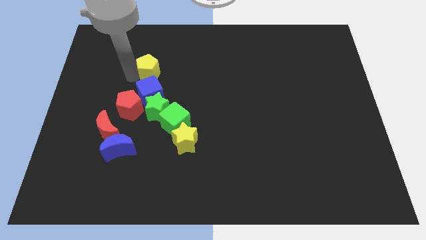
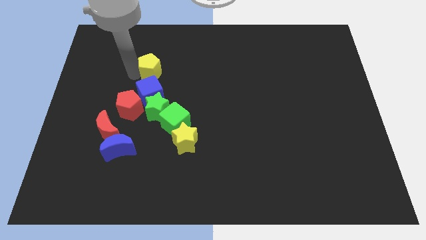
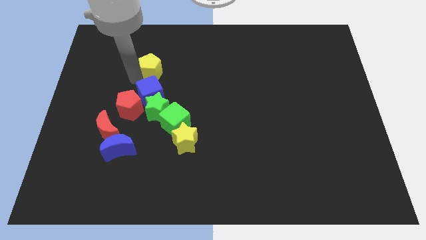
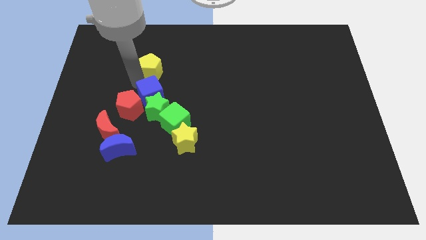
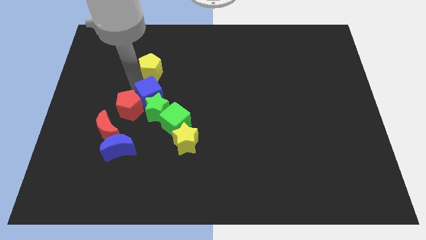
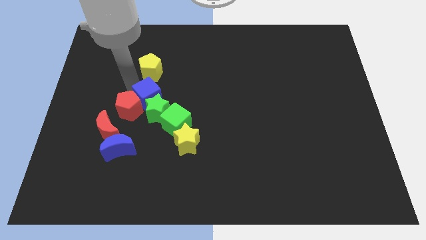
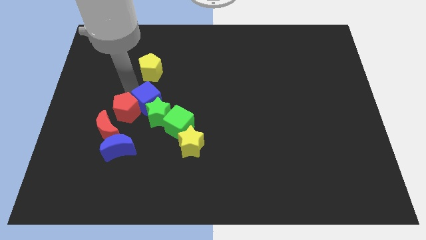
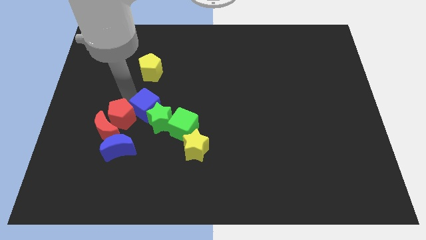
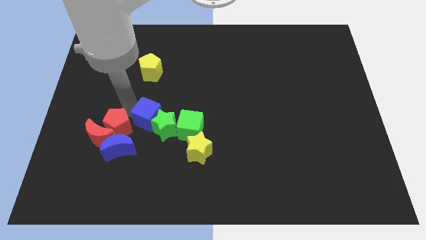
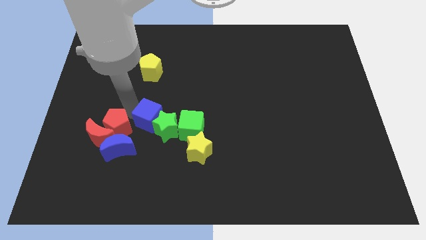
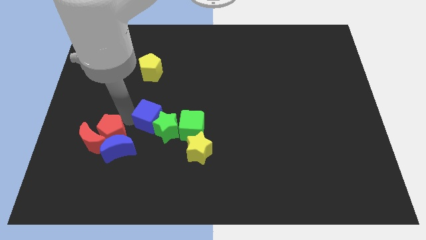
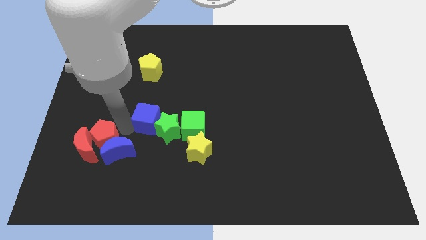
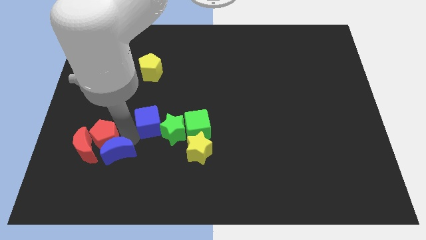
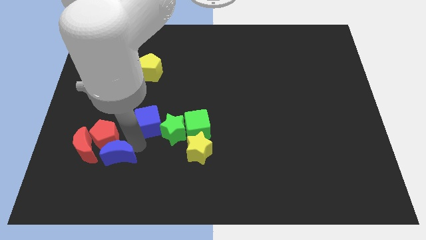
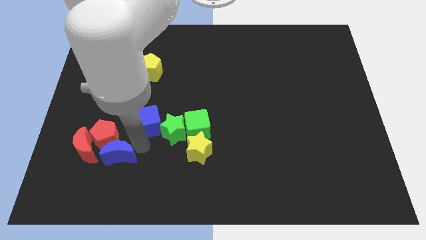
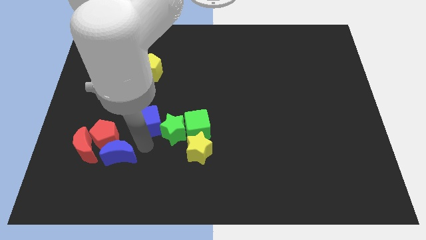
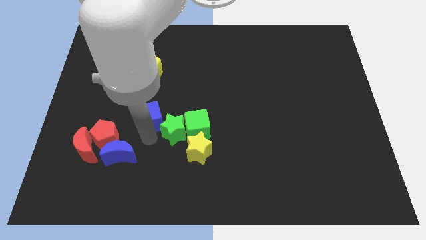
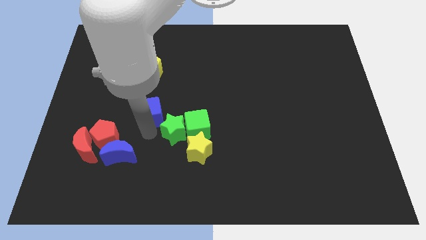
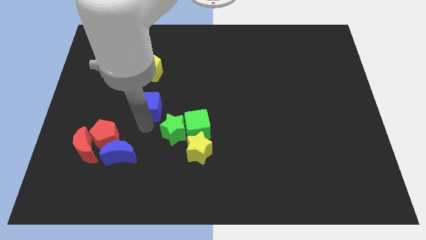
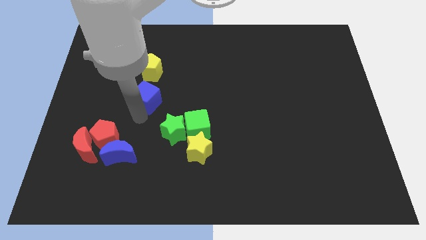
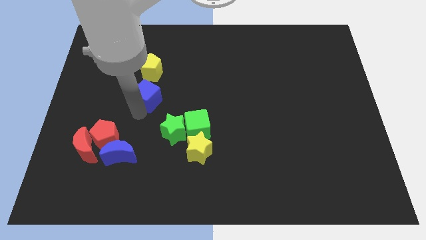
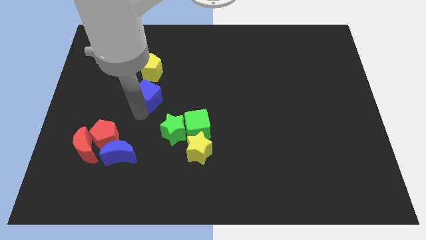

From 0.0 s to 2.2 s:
push the blue cube near to the yellow pentagon

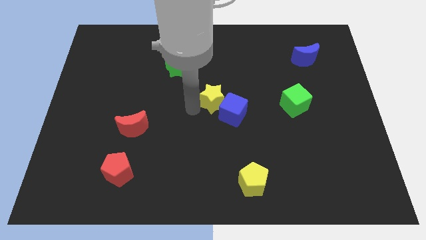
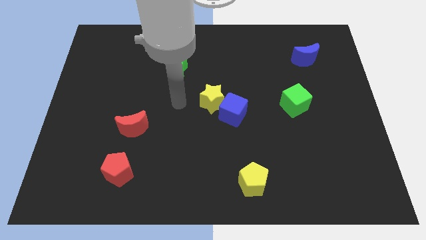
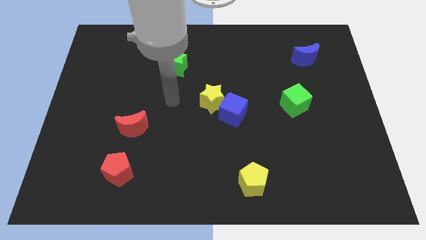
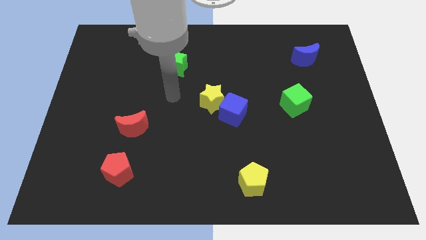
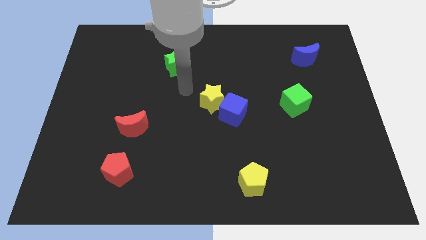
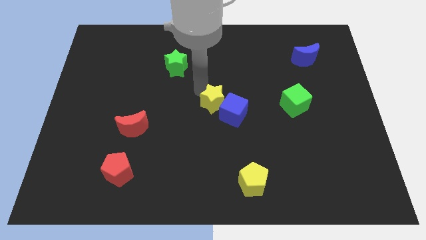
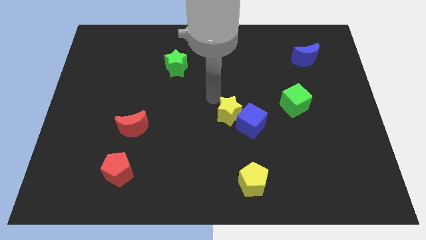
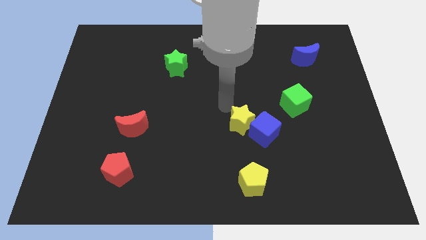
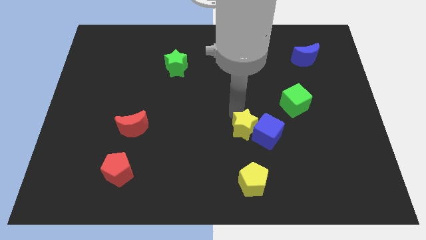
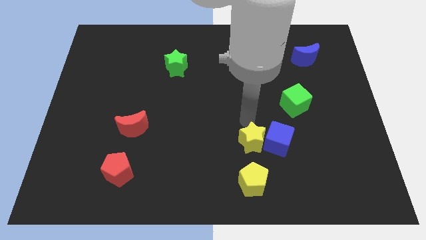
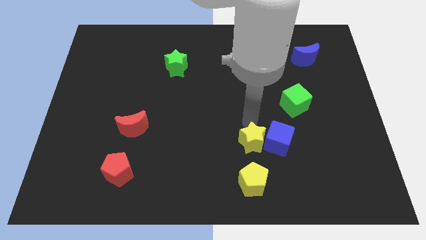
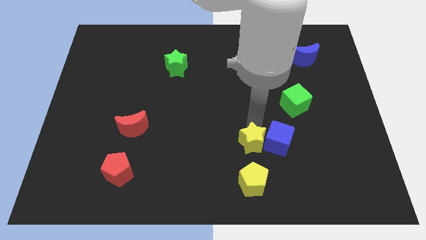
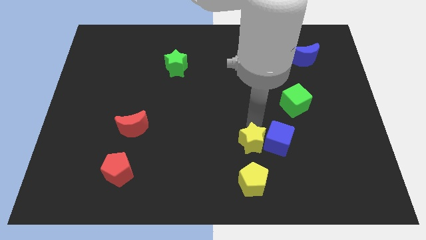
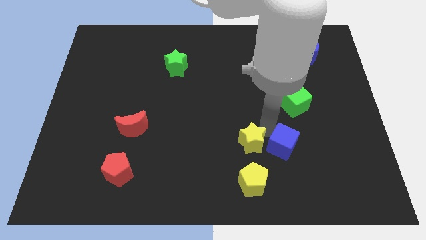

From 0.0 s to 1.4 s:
place yellow star to the top of yellow pentagon

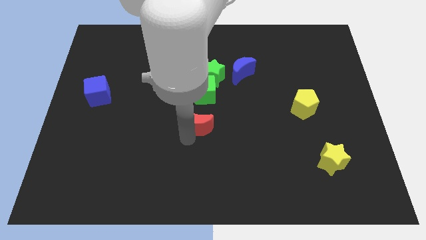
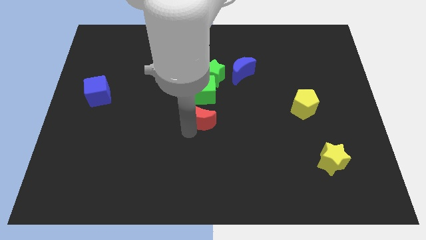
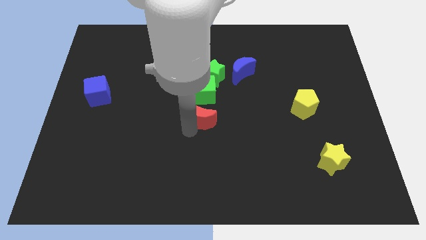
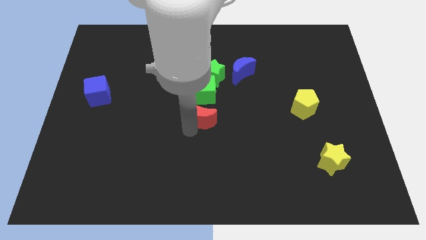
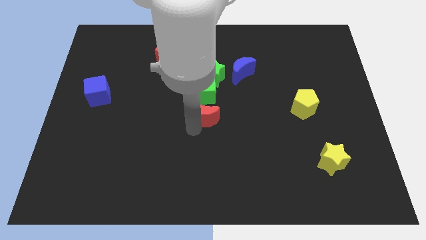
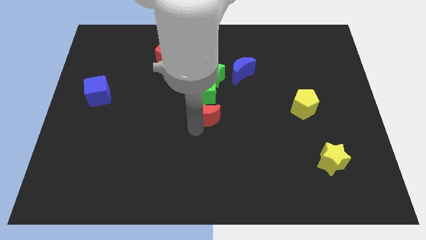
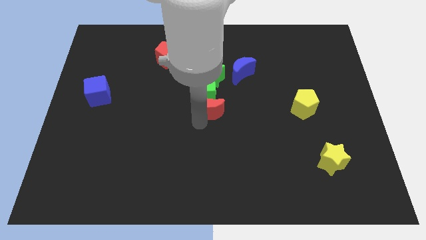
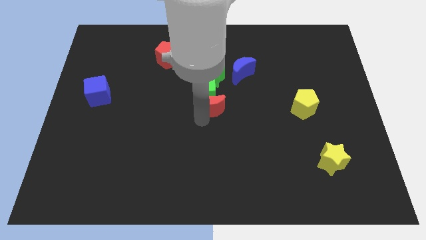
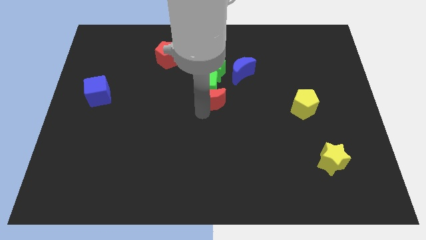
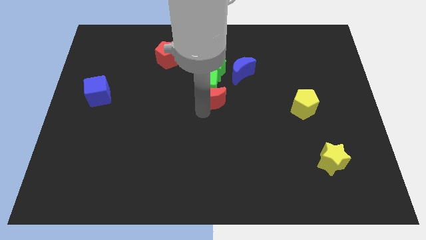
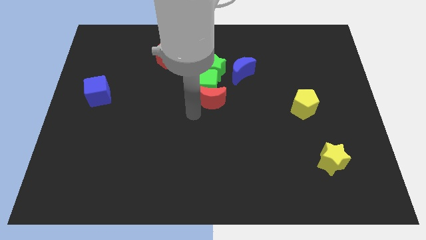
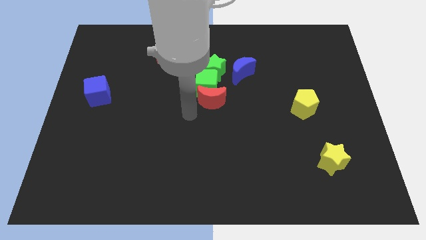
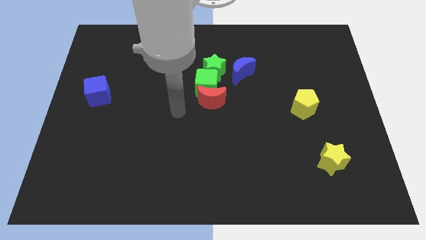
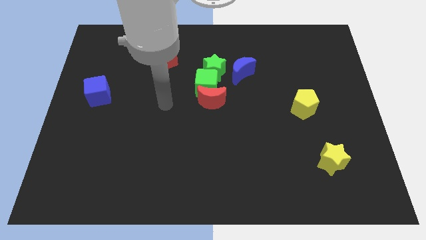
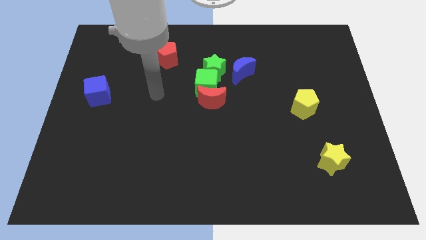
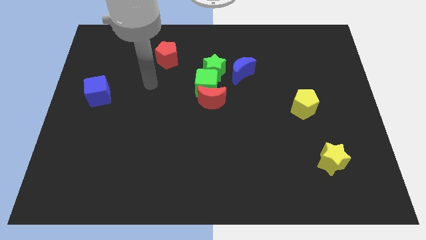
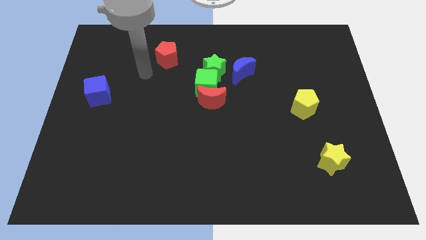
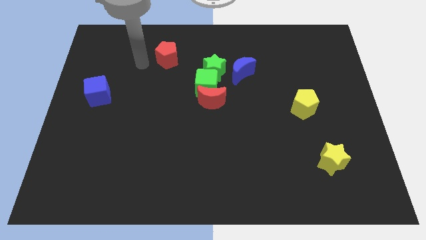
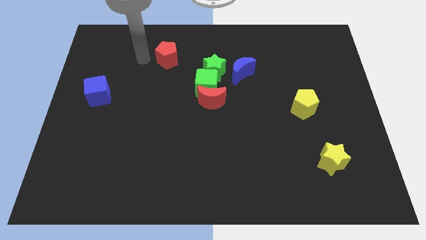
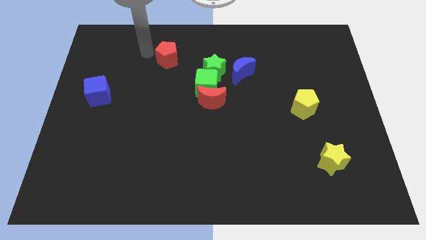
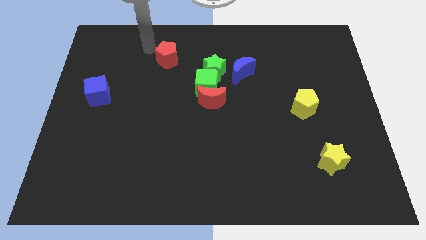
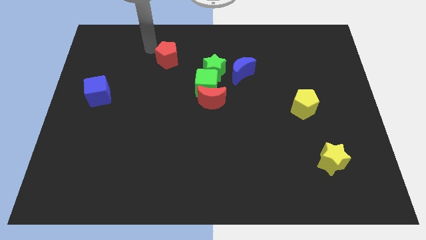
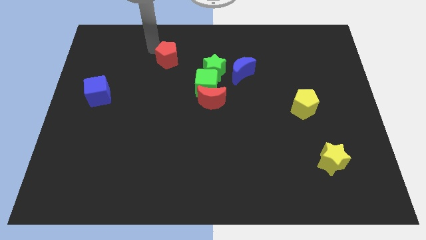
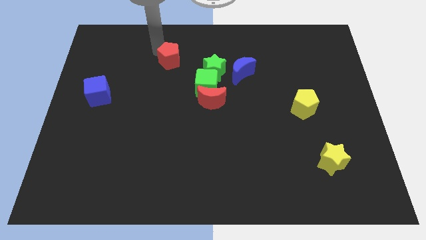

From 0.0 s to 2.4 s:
touch the top left of the red pentagon

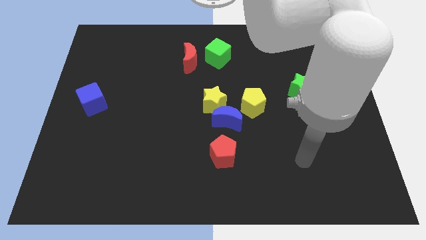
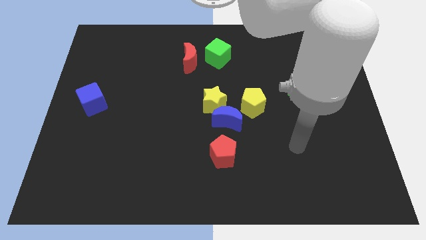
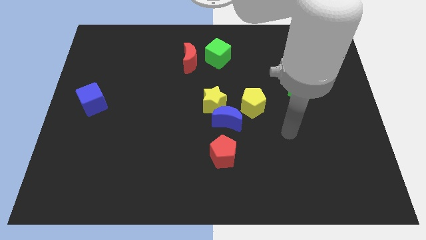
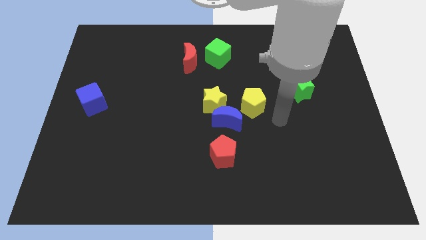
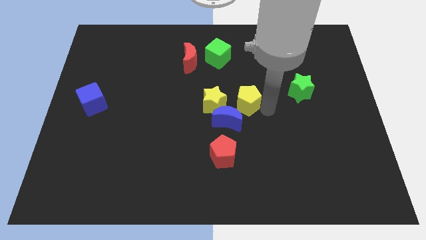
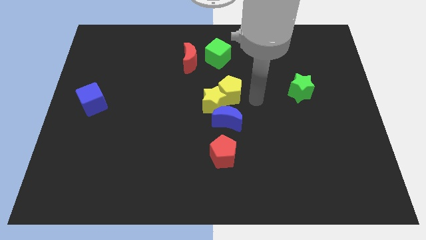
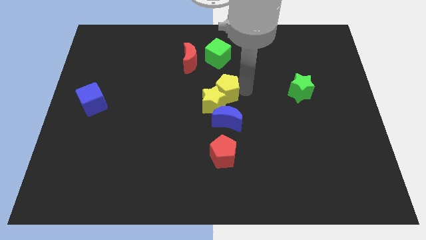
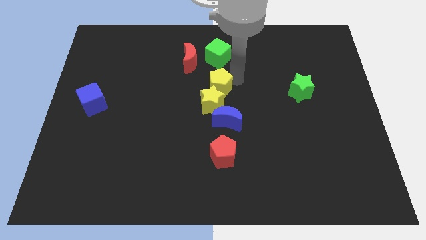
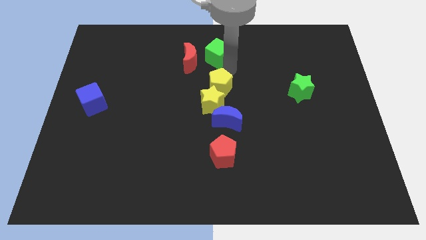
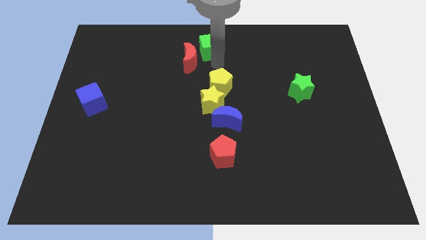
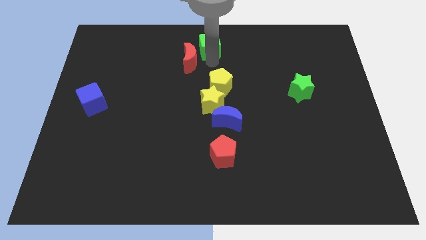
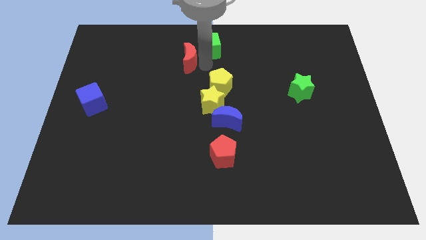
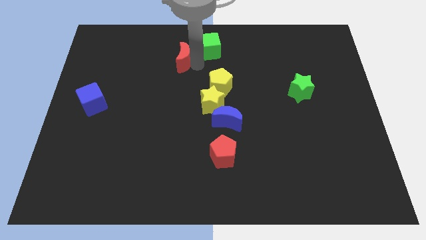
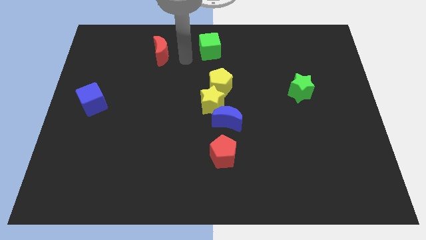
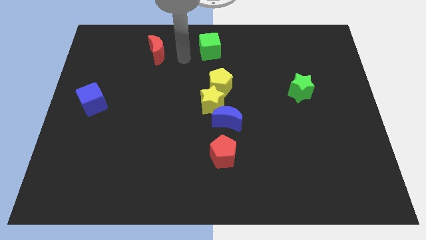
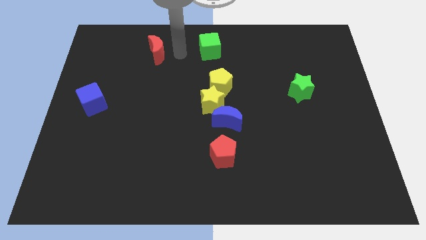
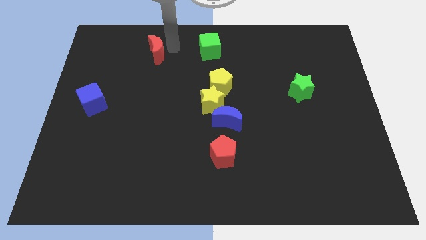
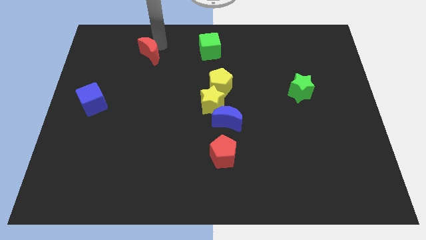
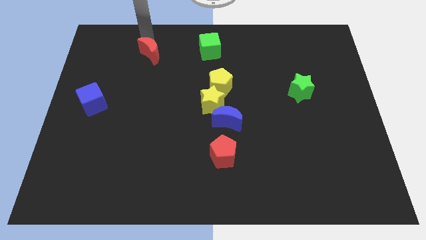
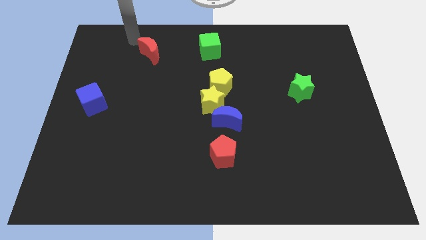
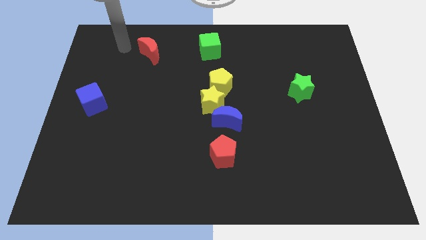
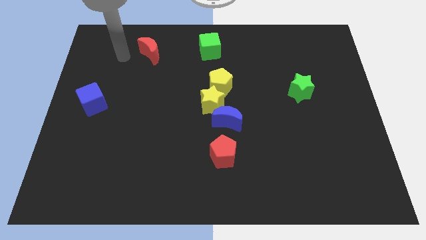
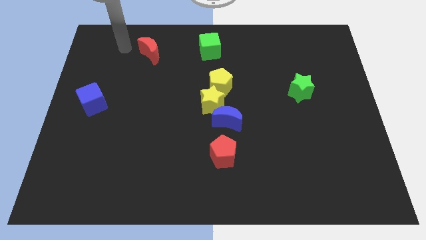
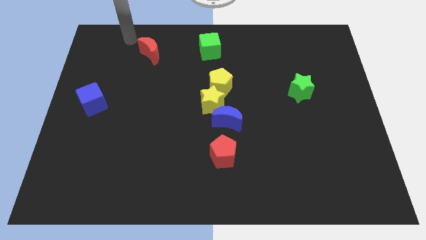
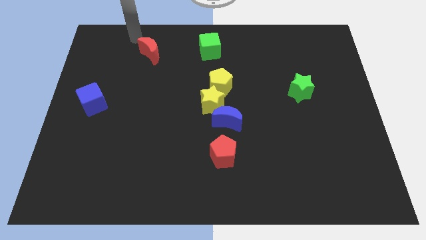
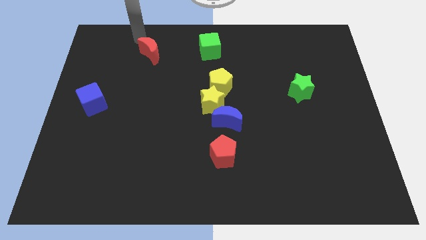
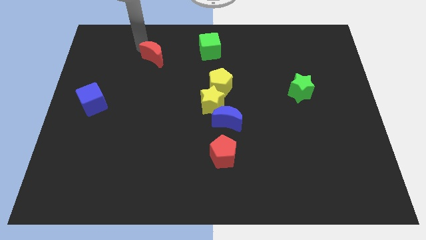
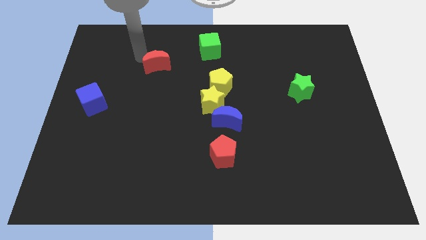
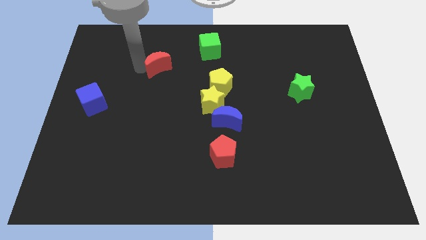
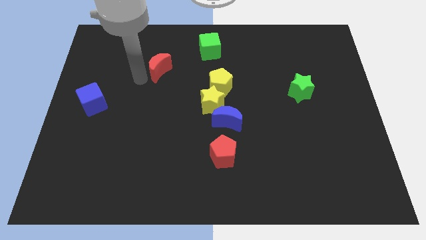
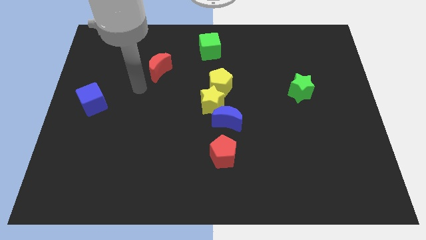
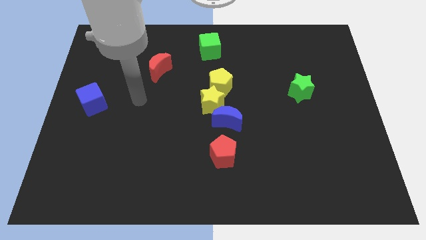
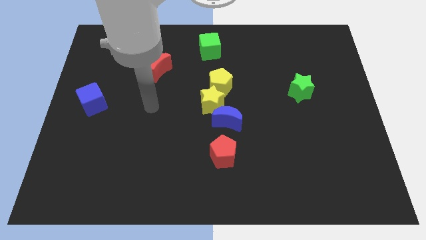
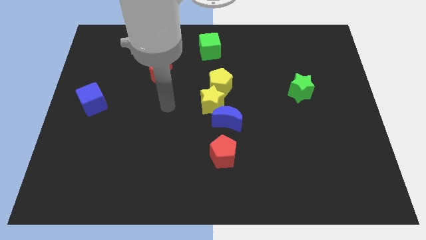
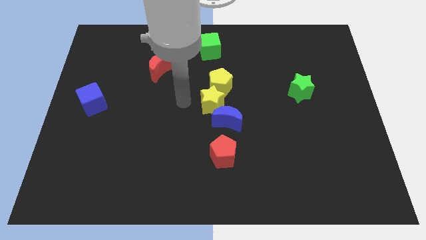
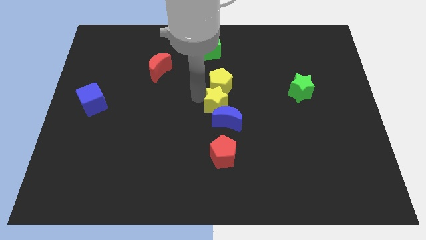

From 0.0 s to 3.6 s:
place the red moon left to the yellow pentagon
